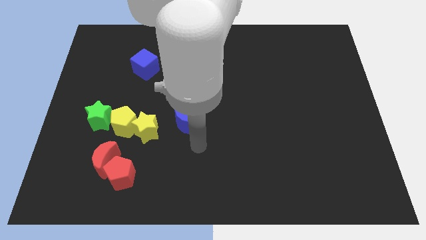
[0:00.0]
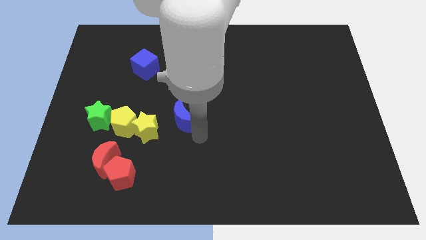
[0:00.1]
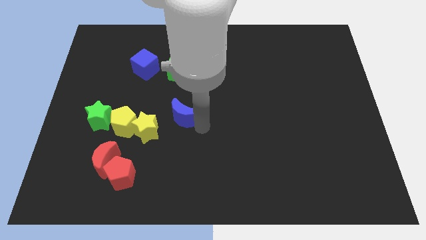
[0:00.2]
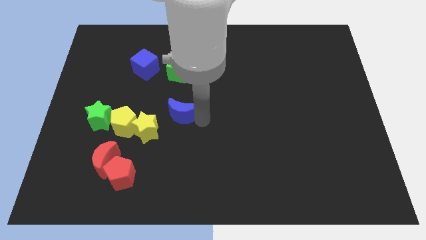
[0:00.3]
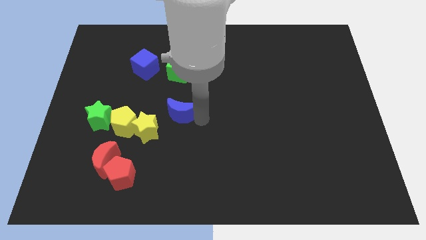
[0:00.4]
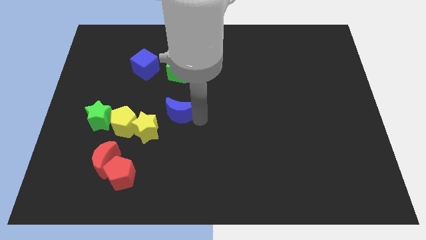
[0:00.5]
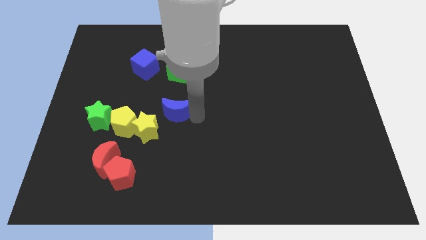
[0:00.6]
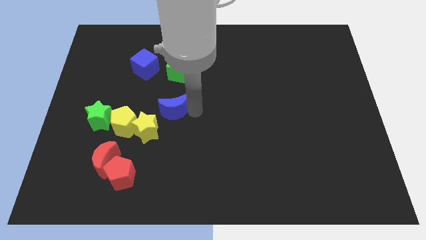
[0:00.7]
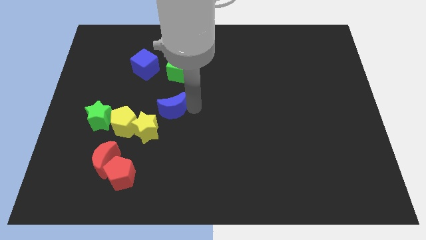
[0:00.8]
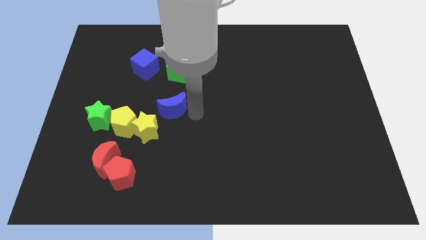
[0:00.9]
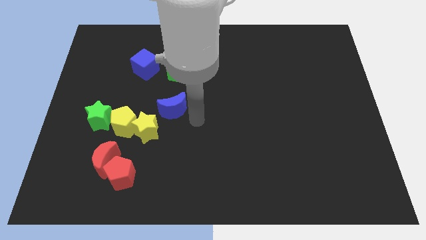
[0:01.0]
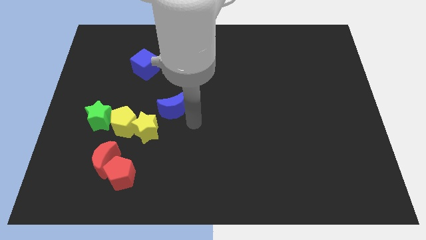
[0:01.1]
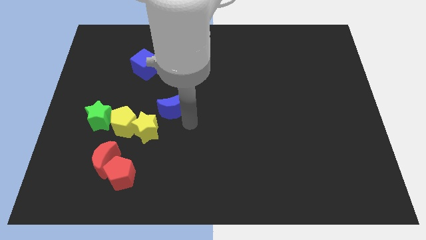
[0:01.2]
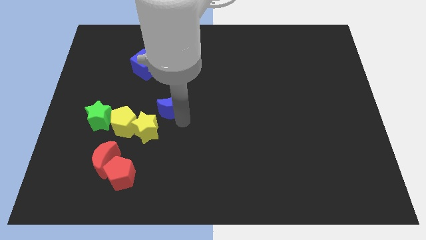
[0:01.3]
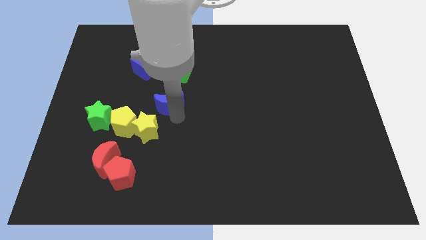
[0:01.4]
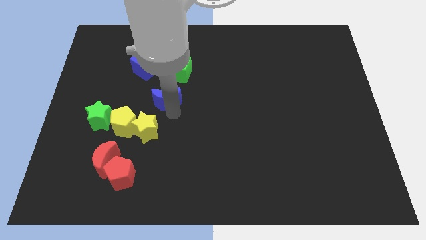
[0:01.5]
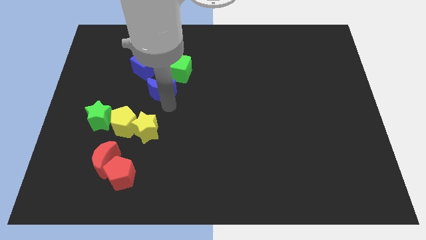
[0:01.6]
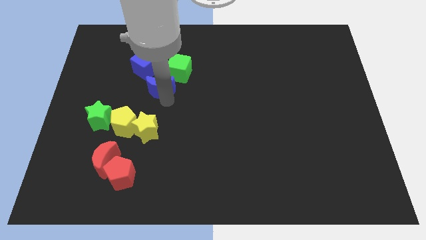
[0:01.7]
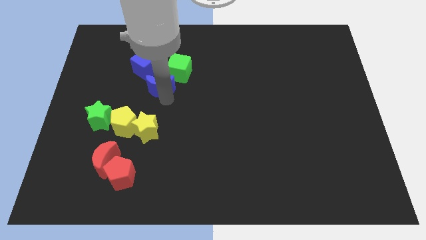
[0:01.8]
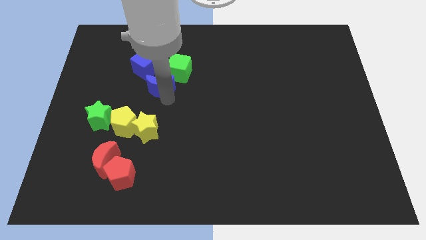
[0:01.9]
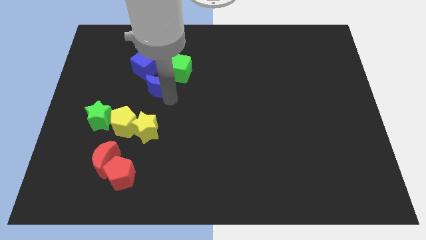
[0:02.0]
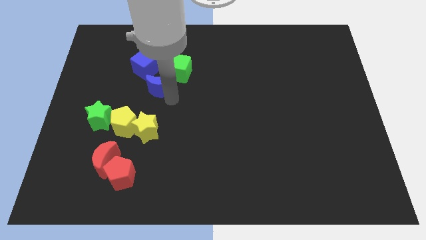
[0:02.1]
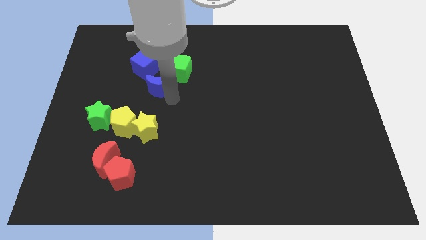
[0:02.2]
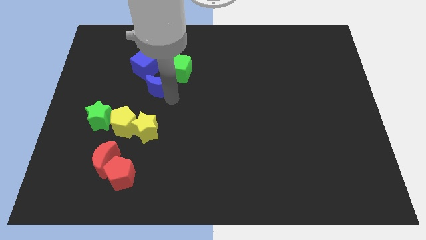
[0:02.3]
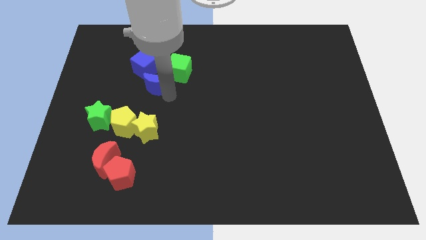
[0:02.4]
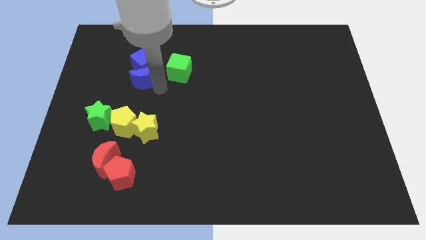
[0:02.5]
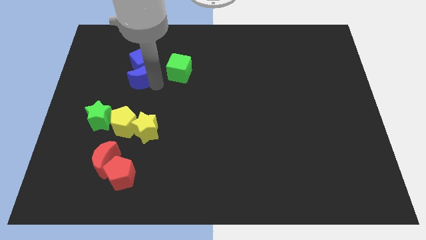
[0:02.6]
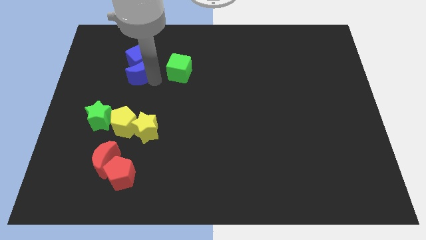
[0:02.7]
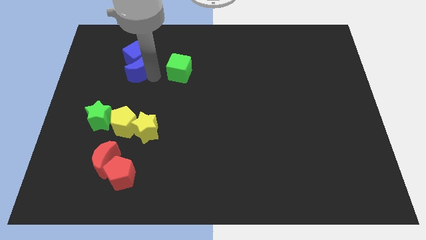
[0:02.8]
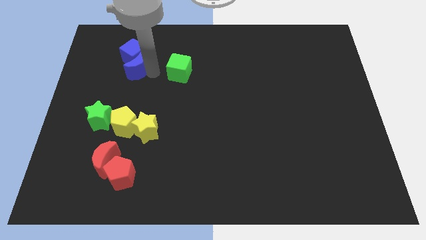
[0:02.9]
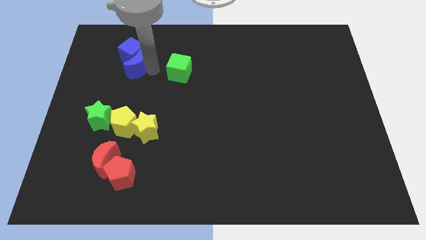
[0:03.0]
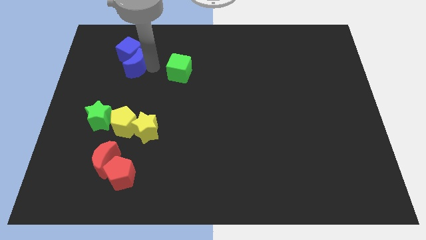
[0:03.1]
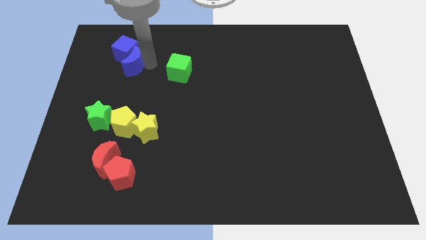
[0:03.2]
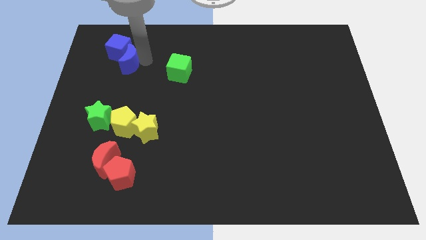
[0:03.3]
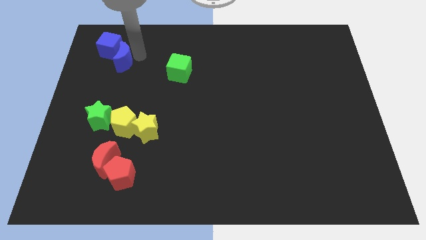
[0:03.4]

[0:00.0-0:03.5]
push the blue moon and blue cube to top left corner

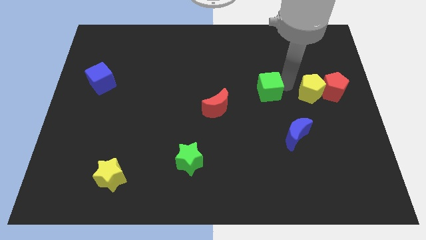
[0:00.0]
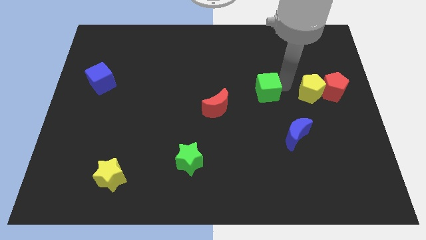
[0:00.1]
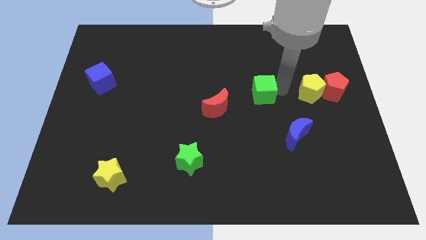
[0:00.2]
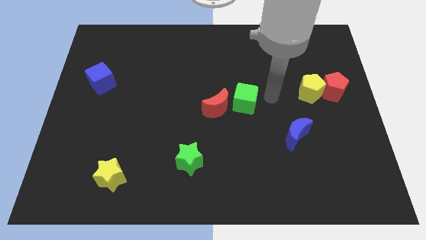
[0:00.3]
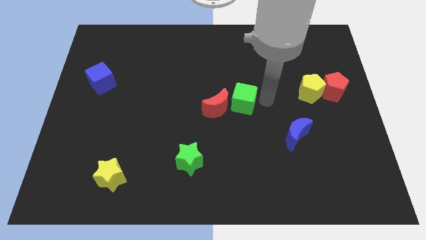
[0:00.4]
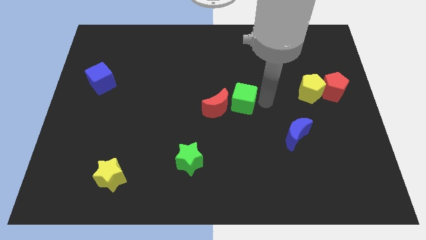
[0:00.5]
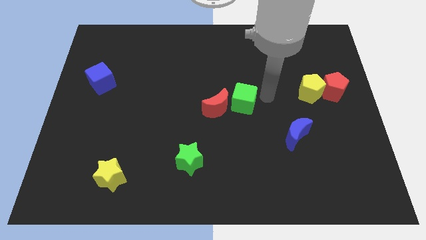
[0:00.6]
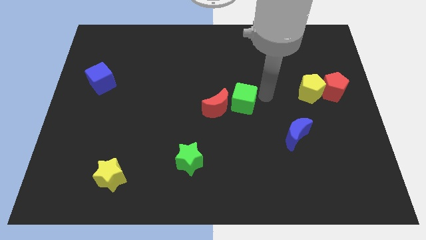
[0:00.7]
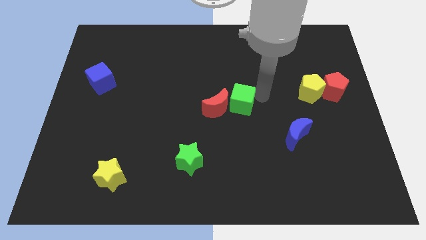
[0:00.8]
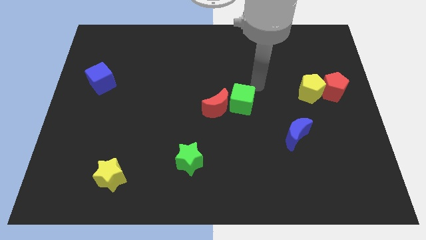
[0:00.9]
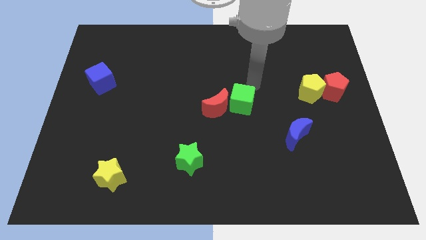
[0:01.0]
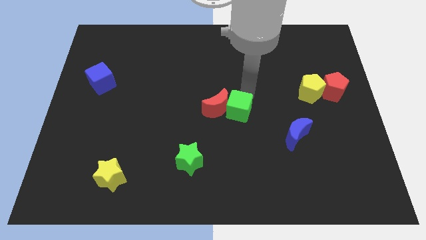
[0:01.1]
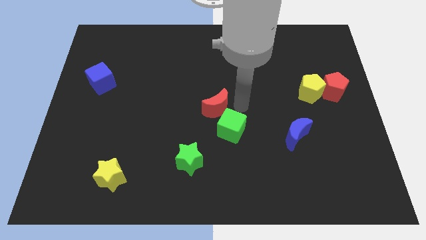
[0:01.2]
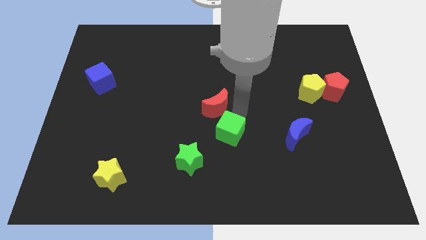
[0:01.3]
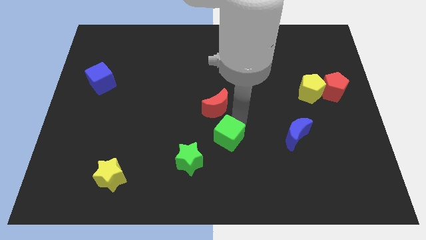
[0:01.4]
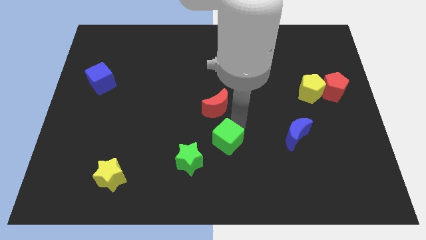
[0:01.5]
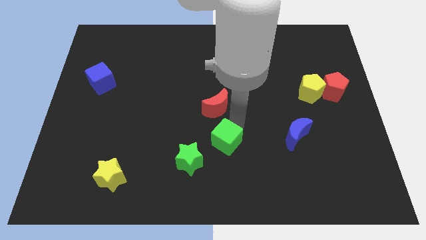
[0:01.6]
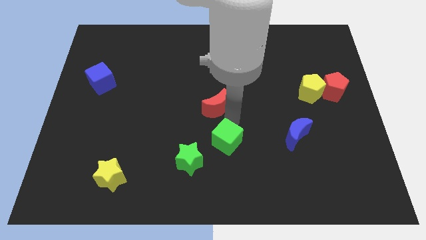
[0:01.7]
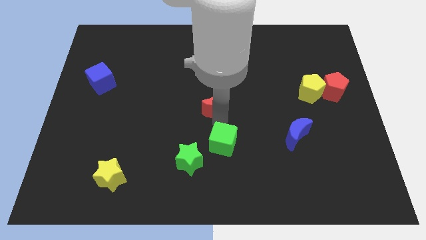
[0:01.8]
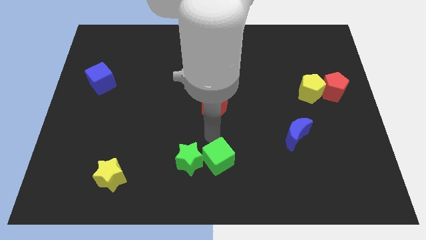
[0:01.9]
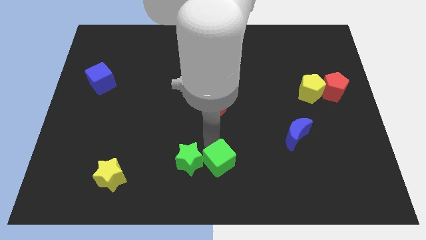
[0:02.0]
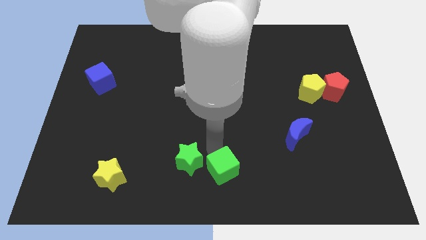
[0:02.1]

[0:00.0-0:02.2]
place the green cube to the right of the green star

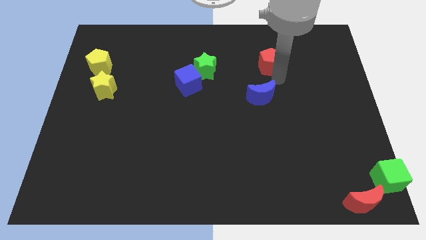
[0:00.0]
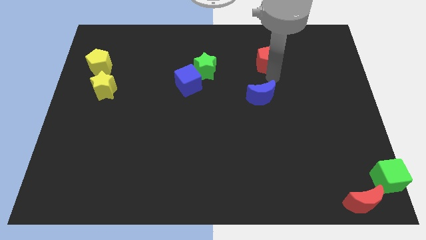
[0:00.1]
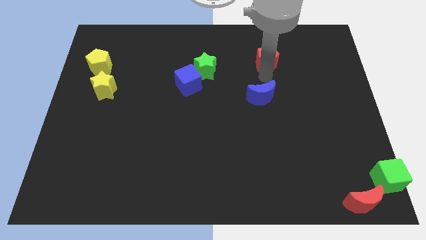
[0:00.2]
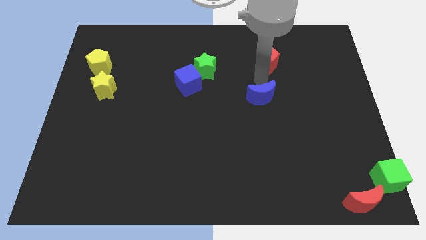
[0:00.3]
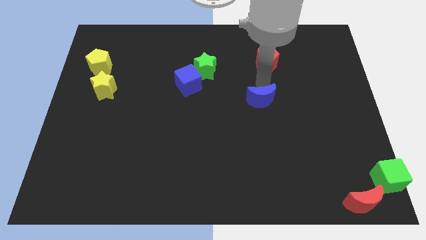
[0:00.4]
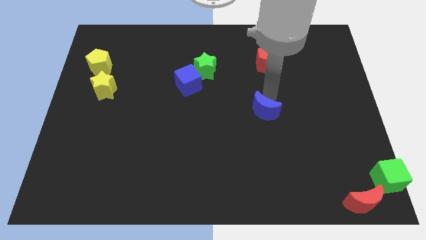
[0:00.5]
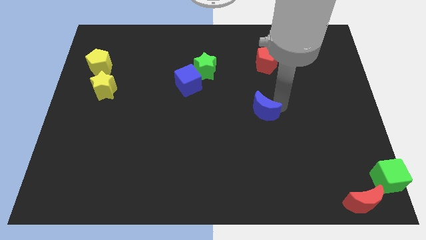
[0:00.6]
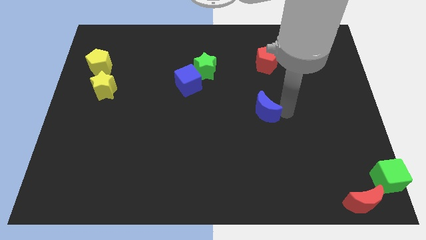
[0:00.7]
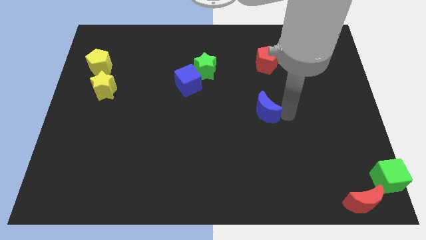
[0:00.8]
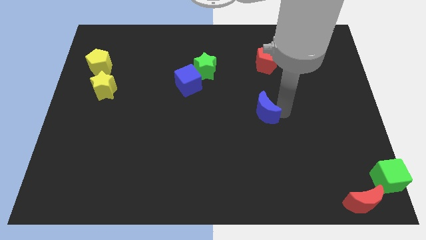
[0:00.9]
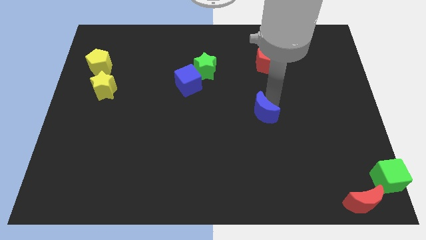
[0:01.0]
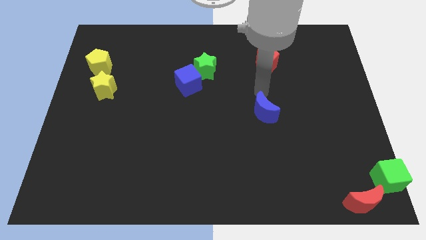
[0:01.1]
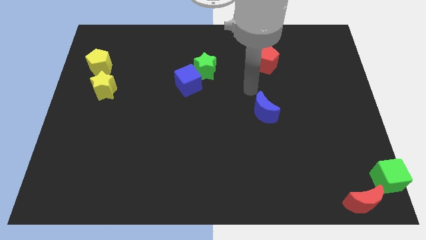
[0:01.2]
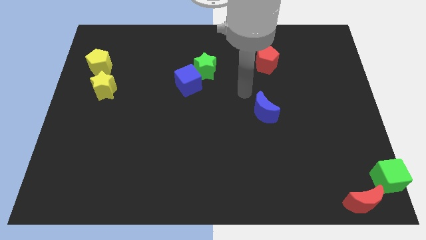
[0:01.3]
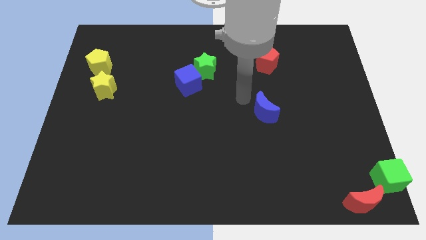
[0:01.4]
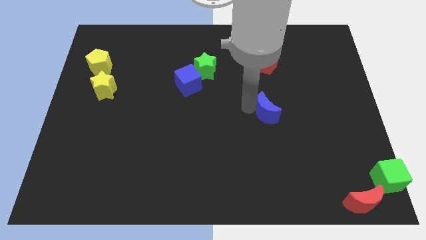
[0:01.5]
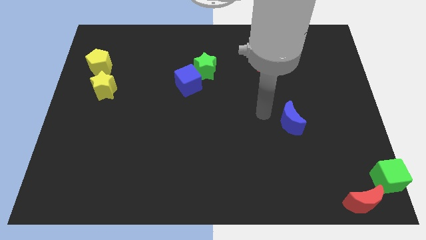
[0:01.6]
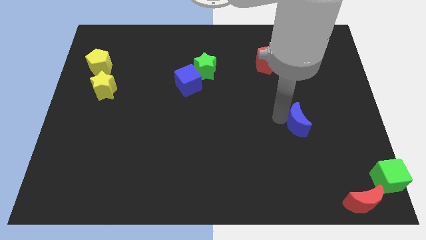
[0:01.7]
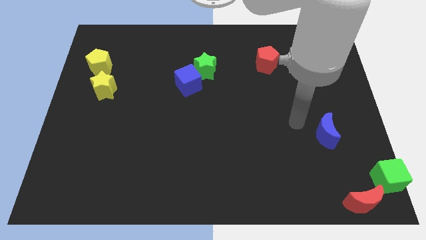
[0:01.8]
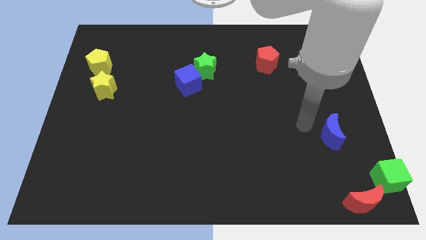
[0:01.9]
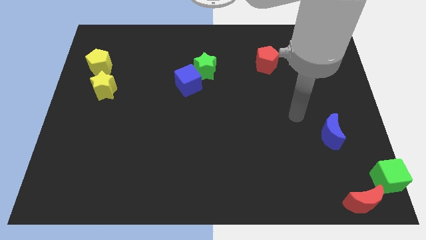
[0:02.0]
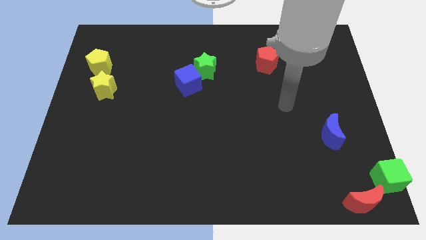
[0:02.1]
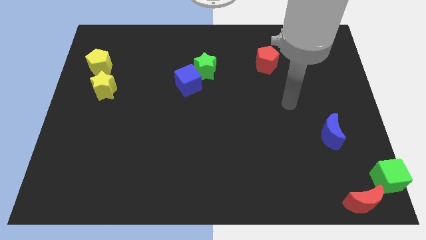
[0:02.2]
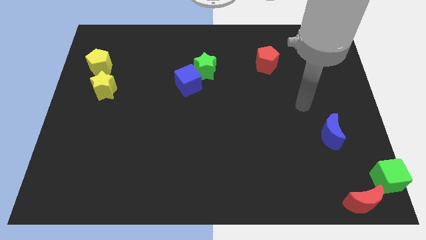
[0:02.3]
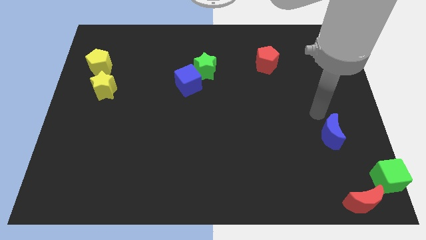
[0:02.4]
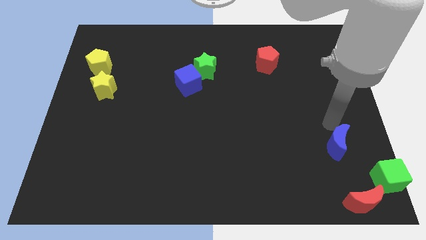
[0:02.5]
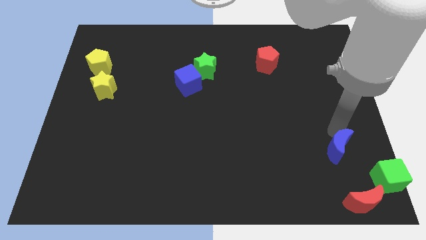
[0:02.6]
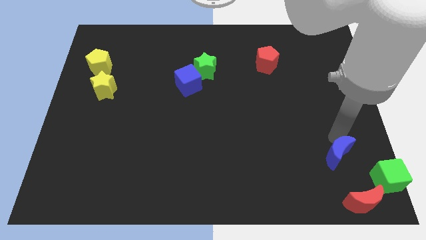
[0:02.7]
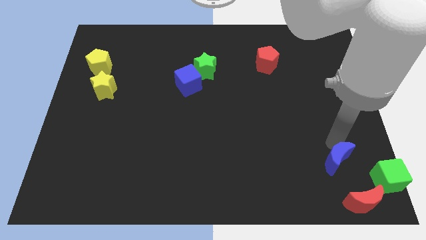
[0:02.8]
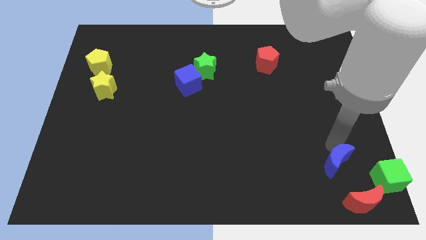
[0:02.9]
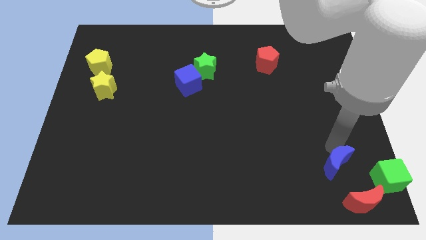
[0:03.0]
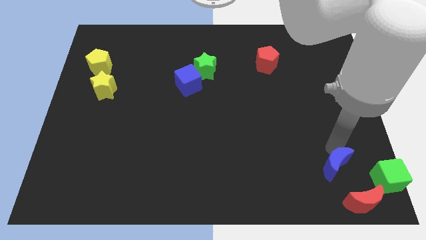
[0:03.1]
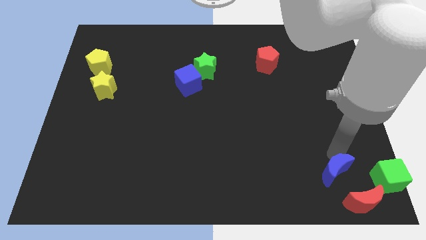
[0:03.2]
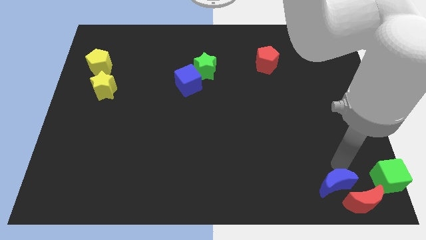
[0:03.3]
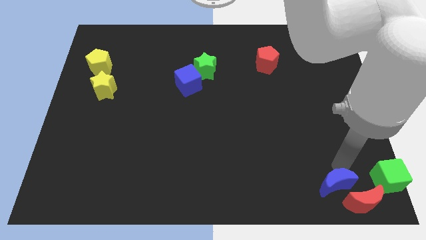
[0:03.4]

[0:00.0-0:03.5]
push the blue moon towards the bottom right of the board
